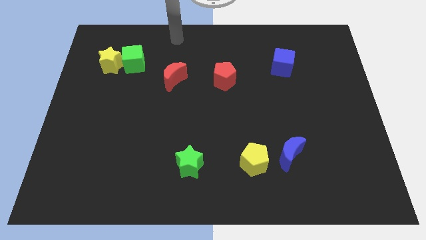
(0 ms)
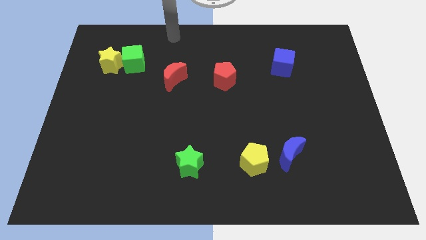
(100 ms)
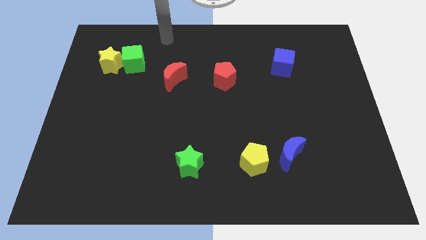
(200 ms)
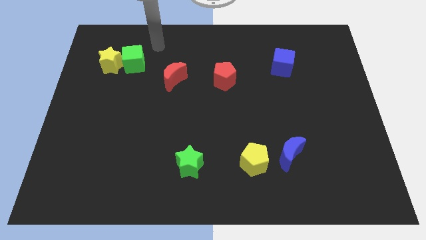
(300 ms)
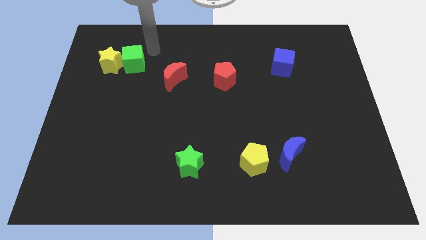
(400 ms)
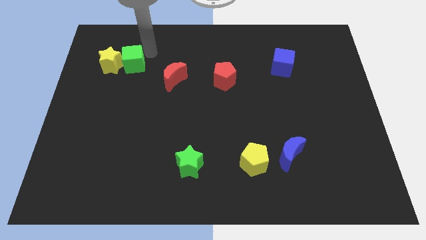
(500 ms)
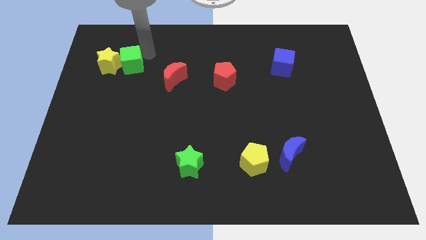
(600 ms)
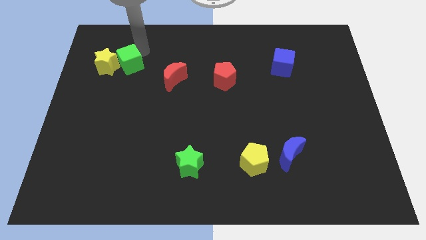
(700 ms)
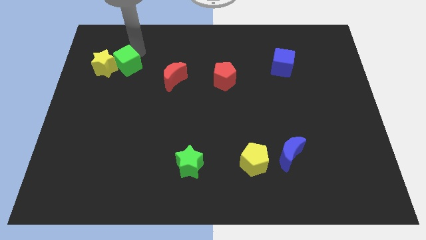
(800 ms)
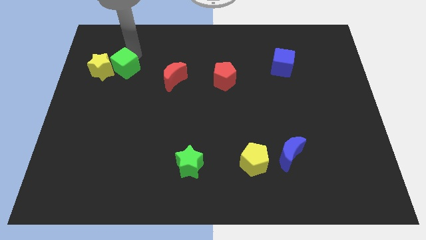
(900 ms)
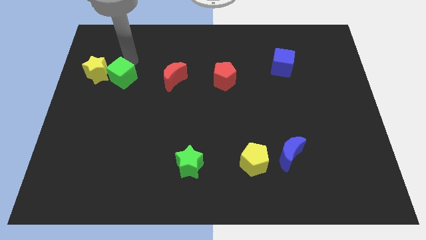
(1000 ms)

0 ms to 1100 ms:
tap on the top side of green cube

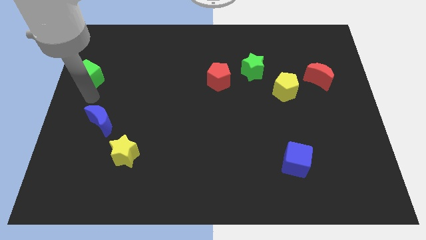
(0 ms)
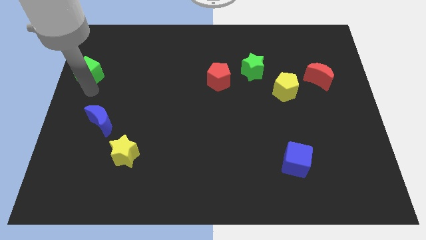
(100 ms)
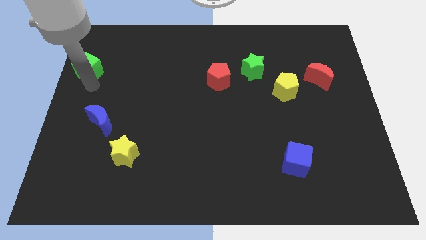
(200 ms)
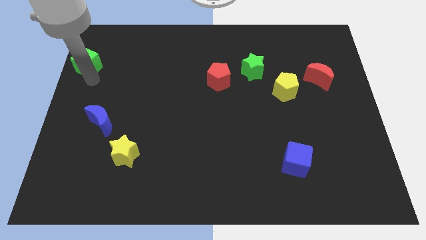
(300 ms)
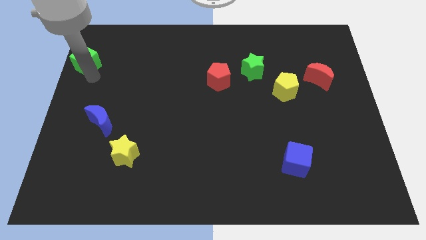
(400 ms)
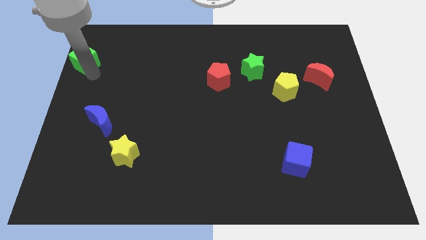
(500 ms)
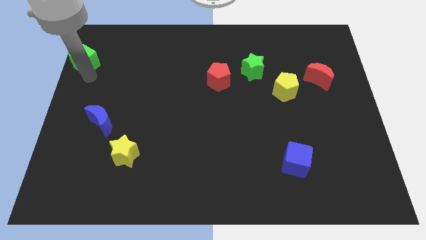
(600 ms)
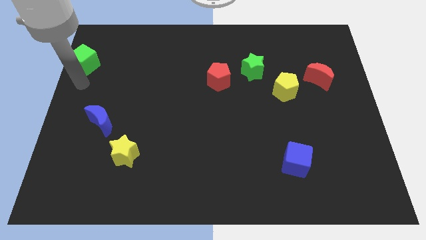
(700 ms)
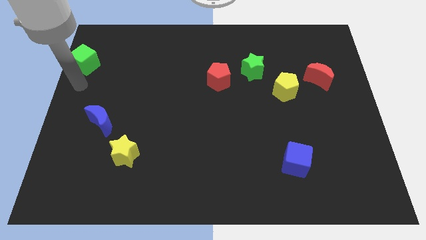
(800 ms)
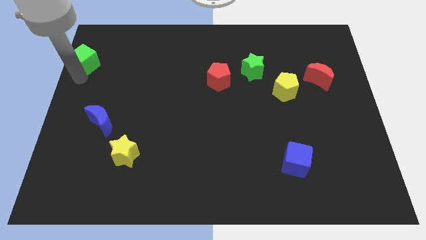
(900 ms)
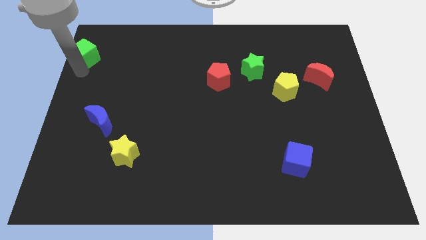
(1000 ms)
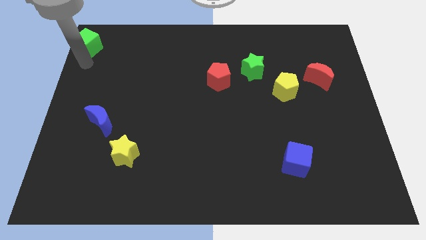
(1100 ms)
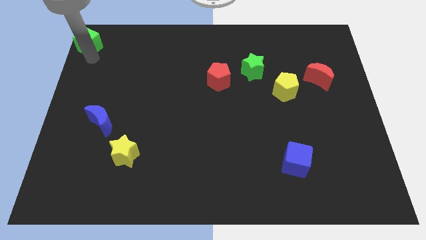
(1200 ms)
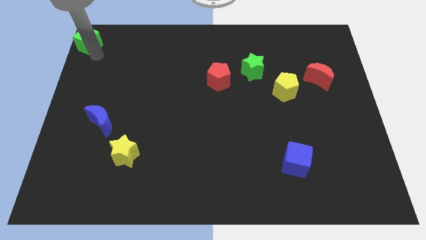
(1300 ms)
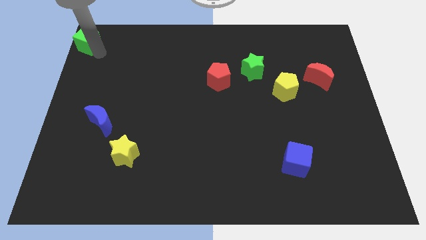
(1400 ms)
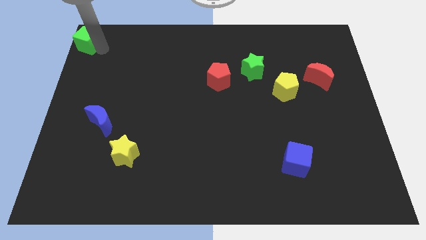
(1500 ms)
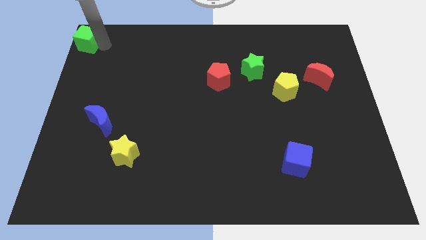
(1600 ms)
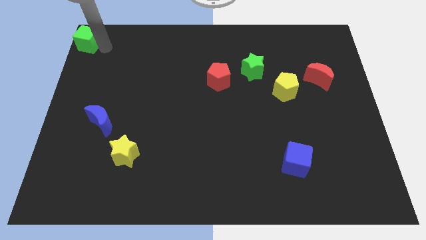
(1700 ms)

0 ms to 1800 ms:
put the green cube diagonally top left to the red pentagon

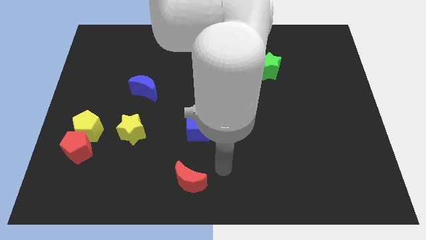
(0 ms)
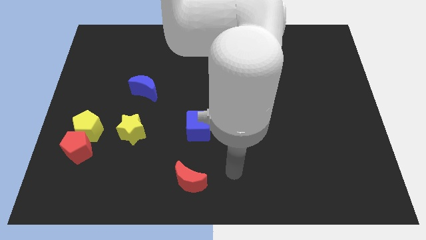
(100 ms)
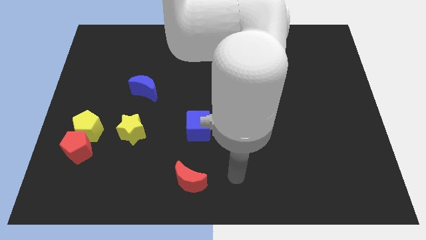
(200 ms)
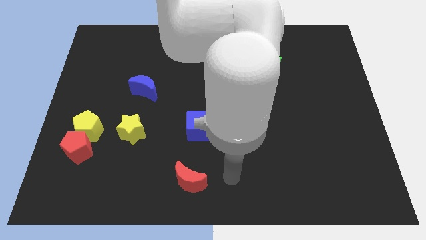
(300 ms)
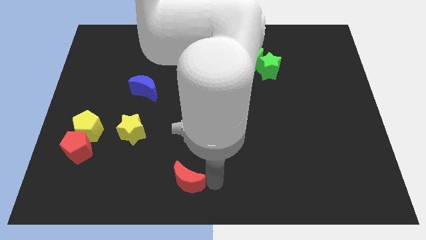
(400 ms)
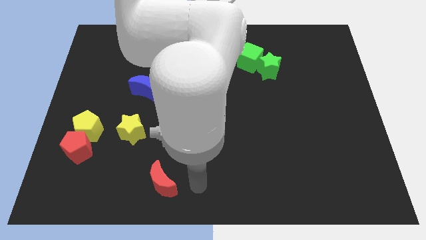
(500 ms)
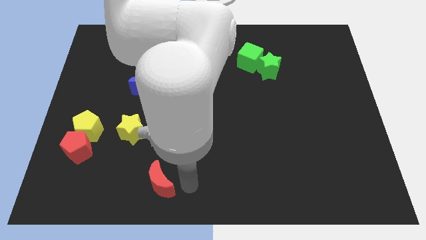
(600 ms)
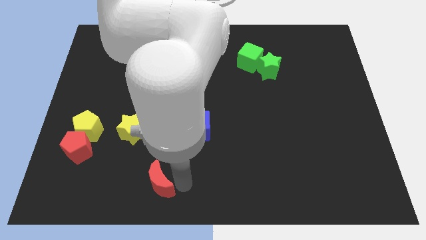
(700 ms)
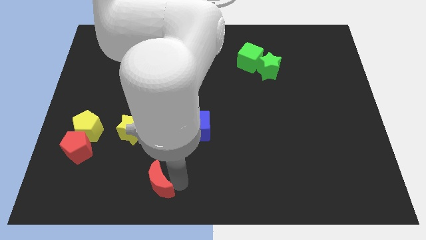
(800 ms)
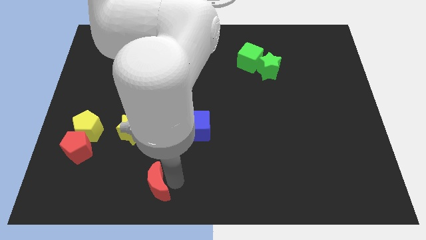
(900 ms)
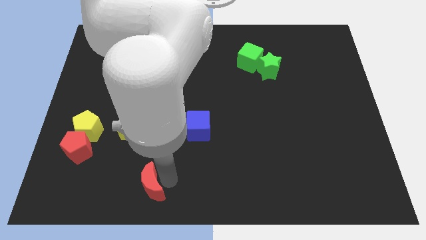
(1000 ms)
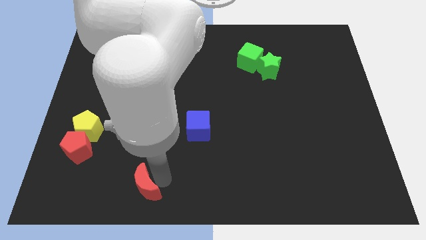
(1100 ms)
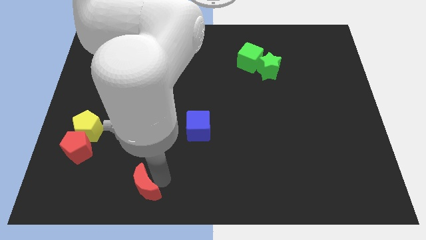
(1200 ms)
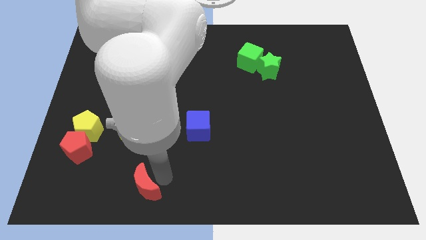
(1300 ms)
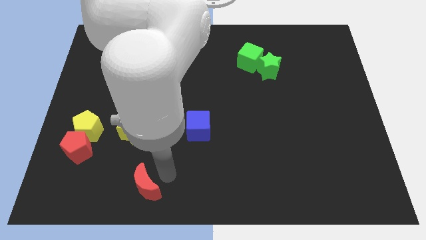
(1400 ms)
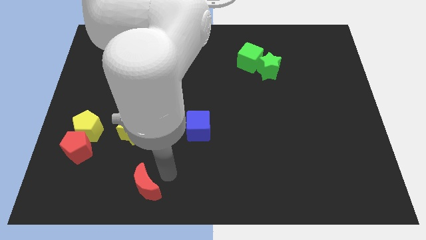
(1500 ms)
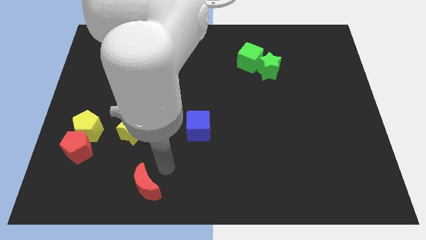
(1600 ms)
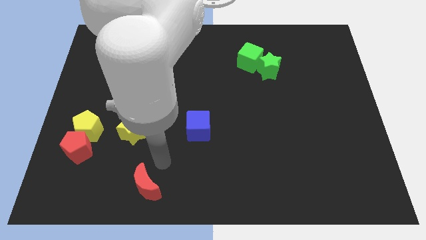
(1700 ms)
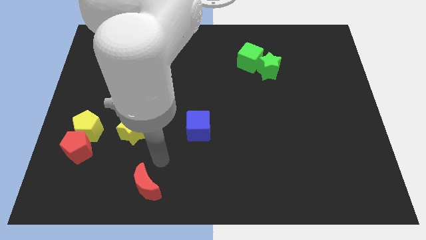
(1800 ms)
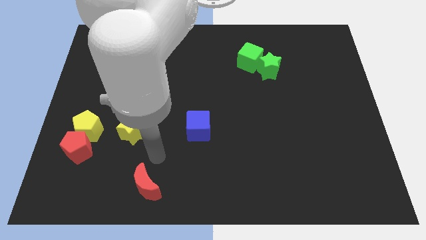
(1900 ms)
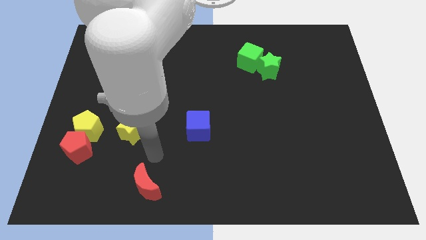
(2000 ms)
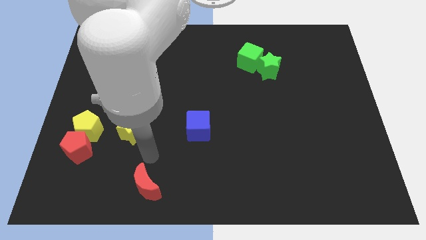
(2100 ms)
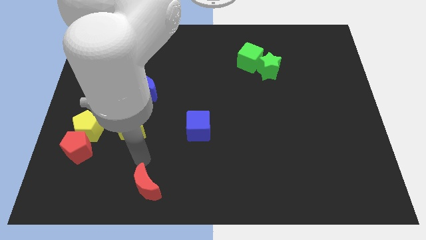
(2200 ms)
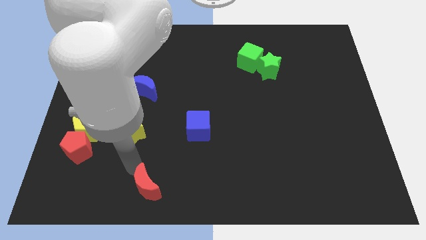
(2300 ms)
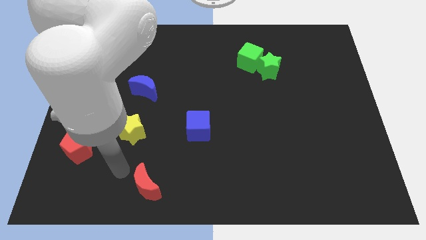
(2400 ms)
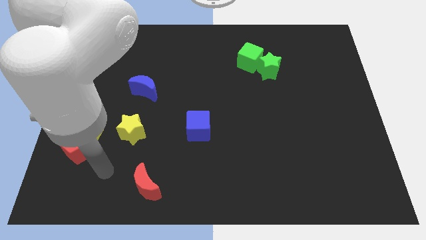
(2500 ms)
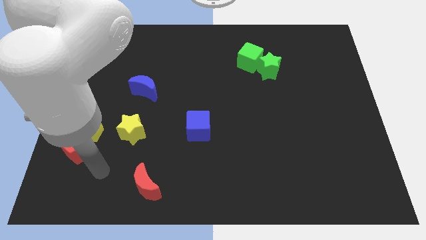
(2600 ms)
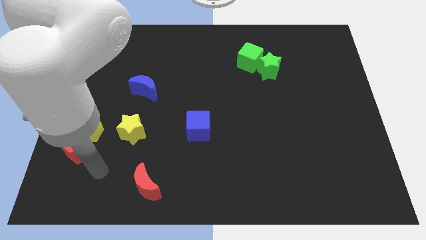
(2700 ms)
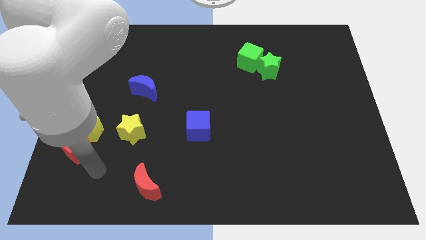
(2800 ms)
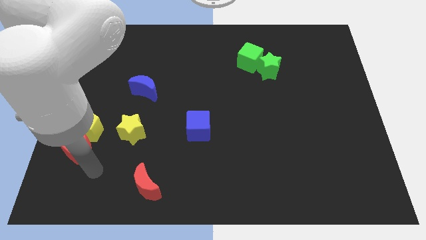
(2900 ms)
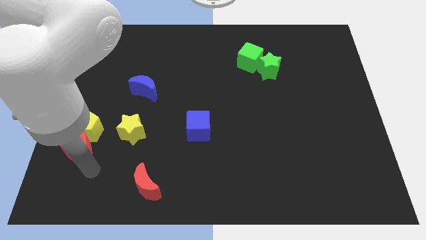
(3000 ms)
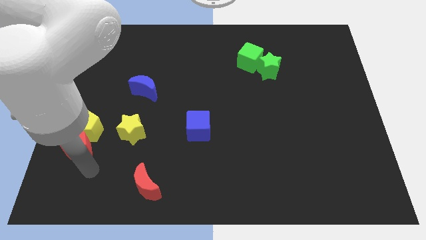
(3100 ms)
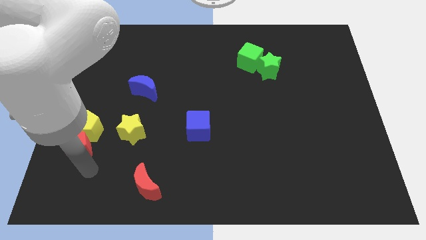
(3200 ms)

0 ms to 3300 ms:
move the red crescent diagonally bottom left to the blue cube

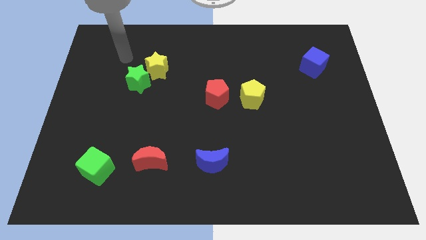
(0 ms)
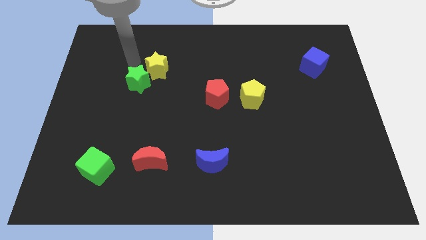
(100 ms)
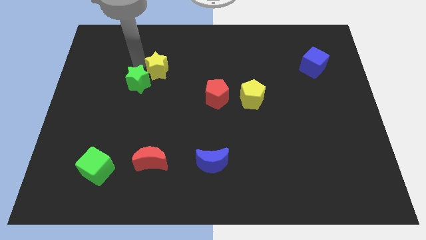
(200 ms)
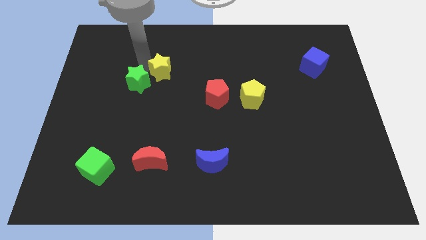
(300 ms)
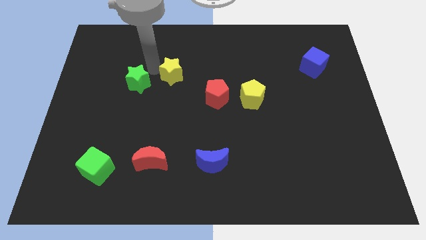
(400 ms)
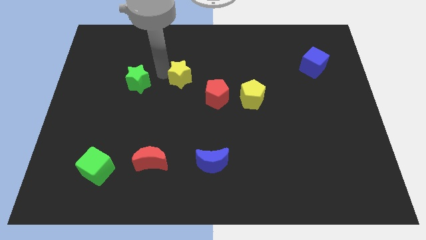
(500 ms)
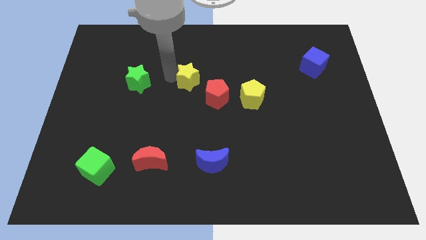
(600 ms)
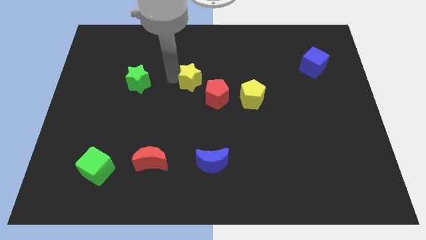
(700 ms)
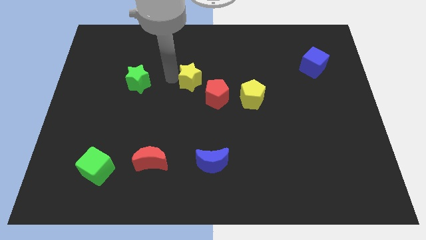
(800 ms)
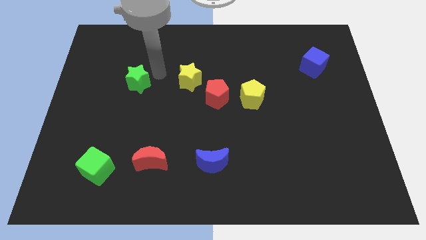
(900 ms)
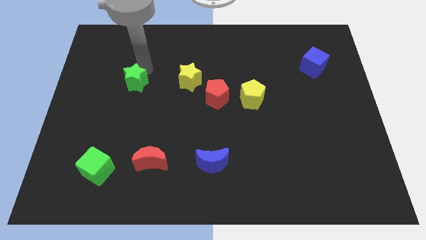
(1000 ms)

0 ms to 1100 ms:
push the yellow star towards the red pentagon

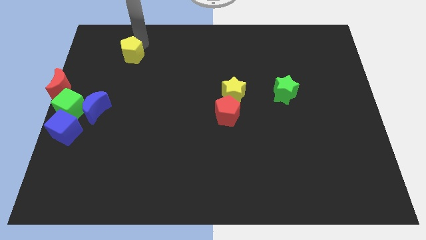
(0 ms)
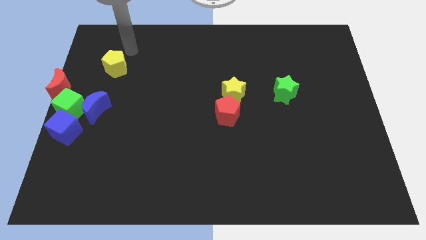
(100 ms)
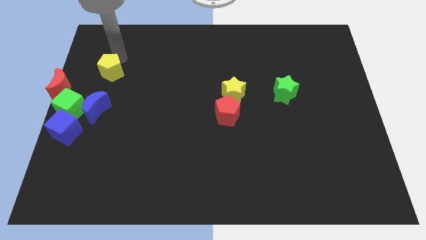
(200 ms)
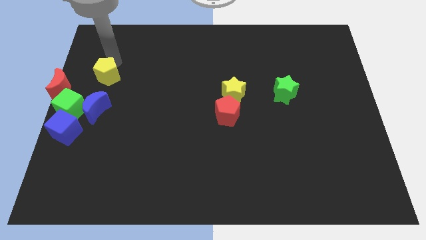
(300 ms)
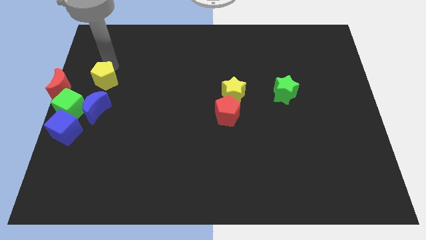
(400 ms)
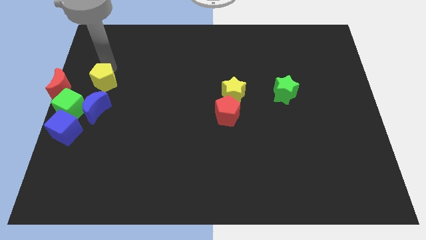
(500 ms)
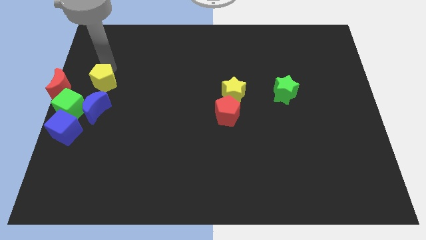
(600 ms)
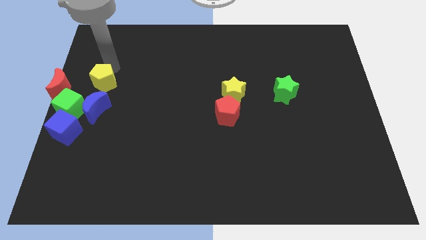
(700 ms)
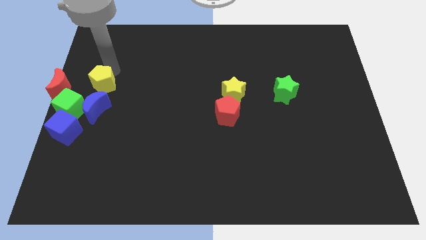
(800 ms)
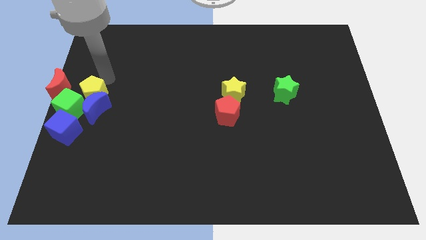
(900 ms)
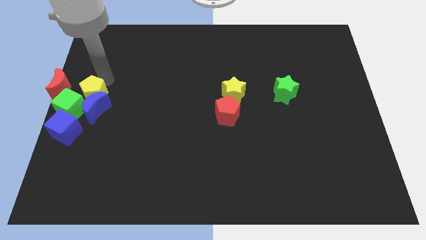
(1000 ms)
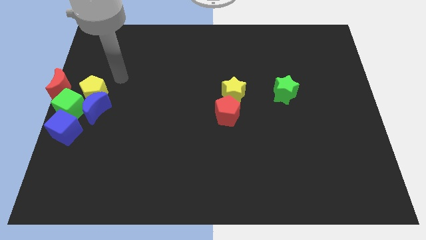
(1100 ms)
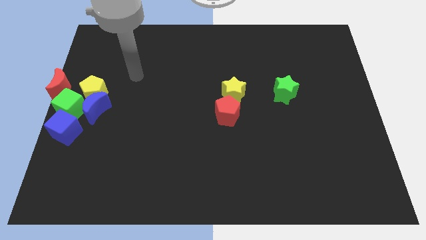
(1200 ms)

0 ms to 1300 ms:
move the yellow pentagon into the group of blocks

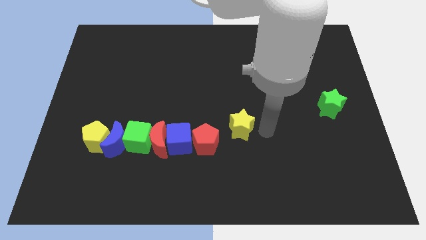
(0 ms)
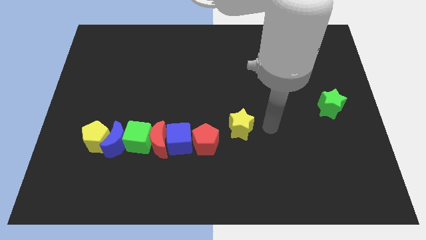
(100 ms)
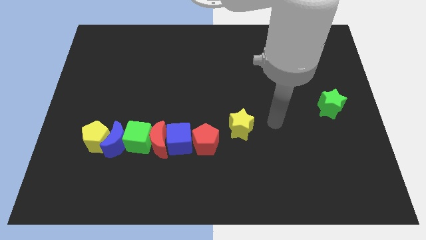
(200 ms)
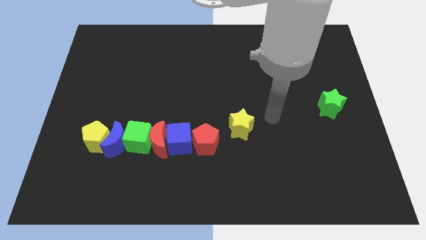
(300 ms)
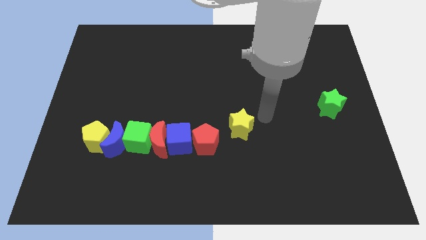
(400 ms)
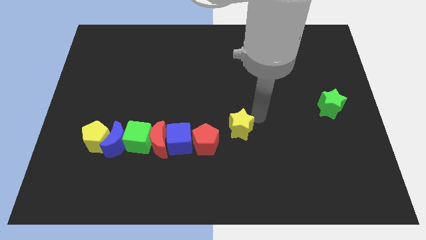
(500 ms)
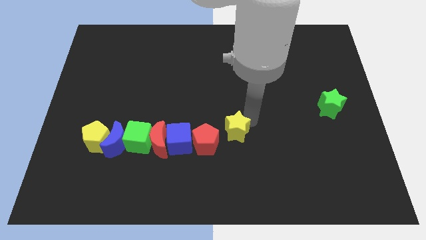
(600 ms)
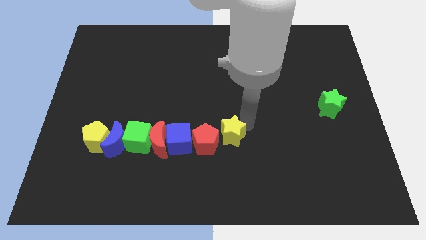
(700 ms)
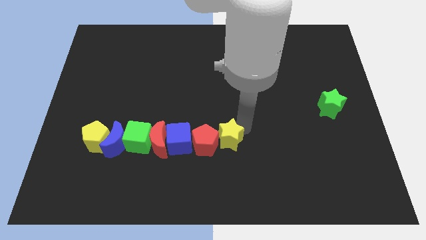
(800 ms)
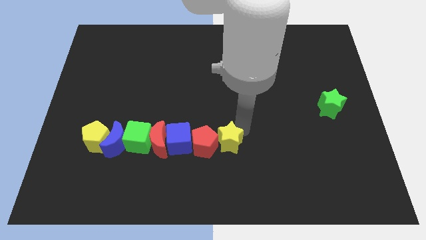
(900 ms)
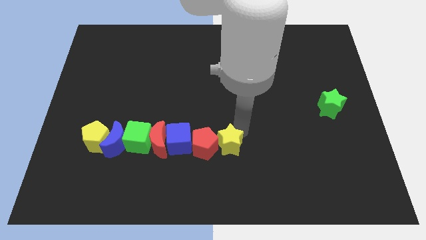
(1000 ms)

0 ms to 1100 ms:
move yellow star right beside the red pentagon
